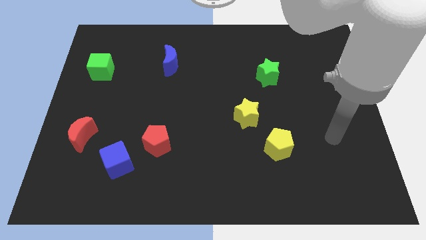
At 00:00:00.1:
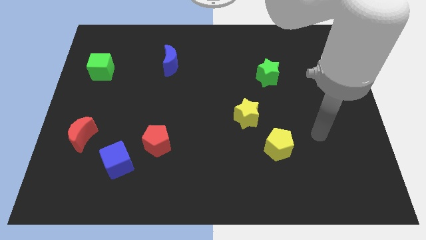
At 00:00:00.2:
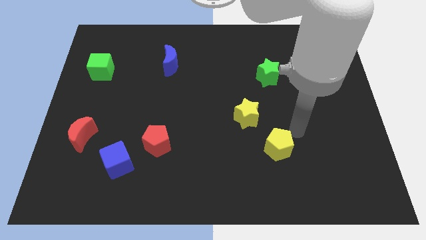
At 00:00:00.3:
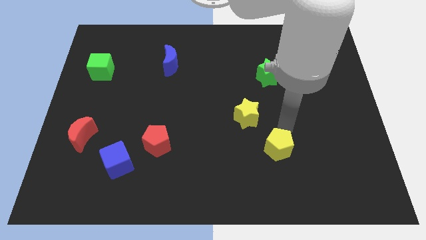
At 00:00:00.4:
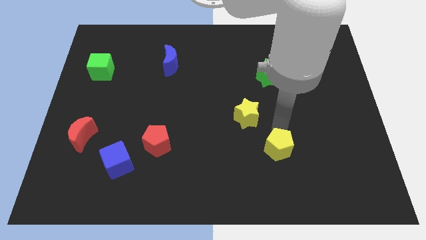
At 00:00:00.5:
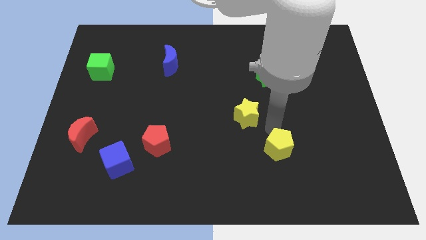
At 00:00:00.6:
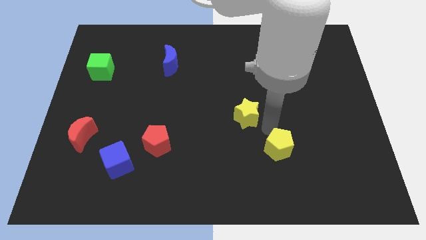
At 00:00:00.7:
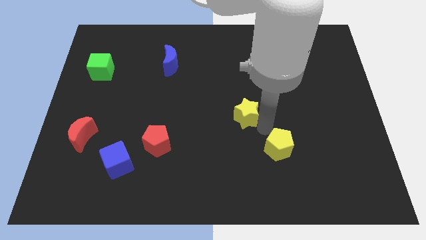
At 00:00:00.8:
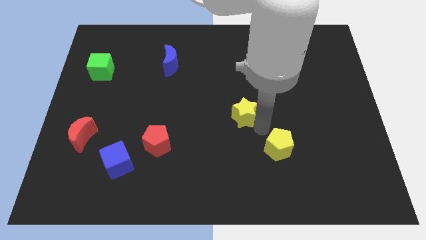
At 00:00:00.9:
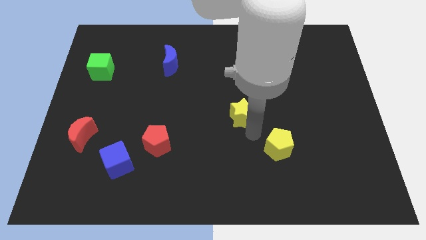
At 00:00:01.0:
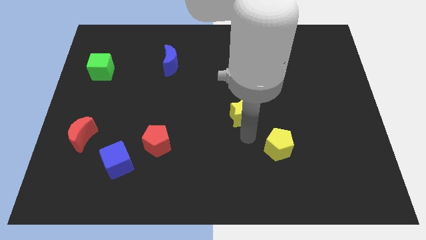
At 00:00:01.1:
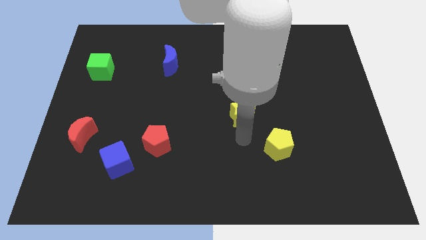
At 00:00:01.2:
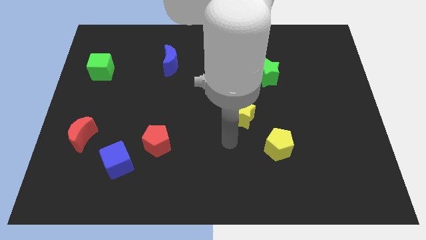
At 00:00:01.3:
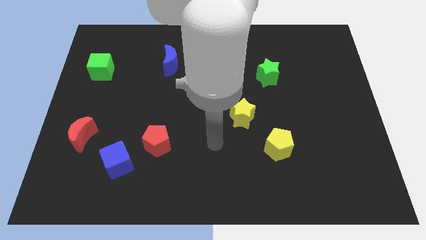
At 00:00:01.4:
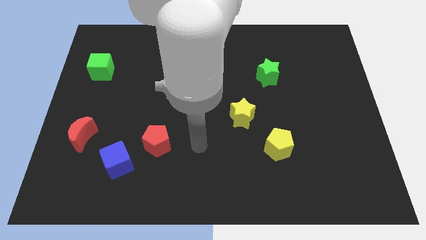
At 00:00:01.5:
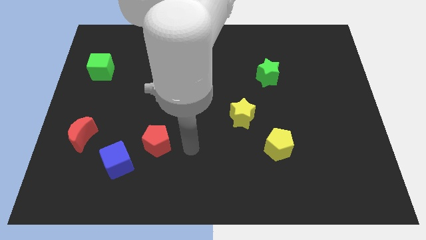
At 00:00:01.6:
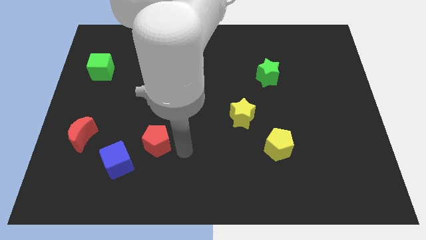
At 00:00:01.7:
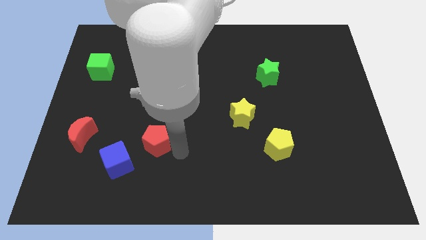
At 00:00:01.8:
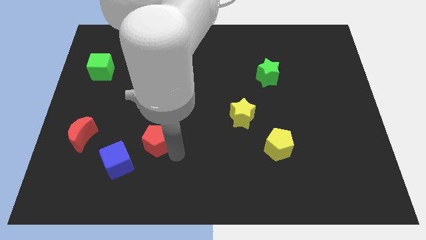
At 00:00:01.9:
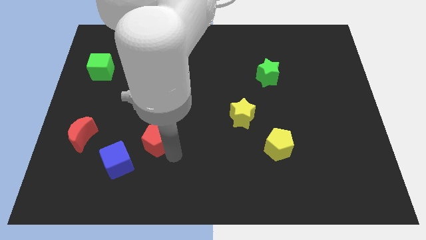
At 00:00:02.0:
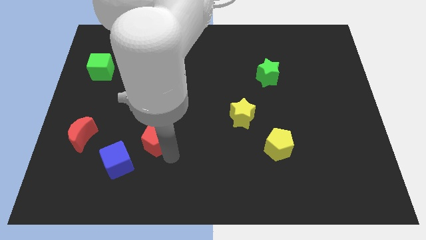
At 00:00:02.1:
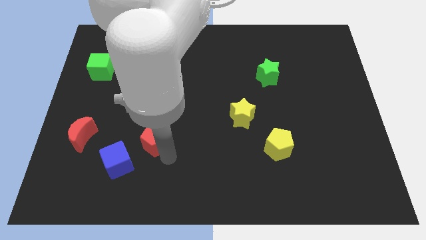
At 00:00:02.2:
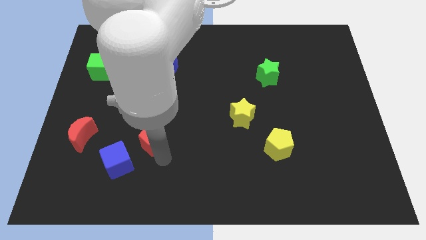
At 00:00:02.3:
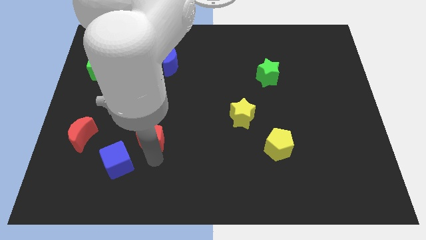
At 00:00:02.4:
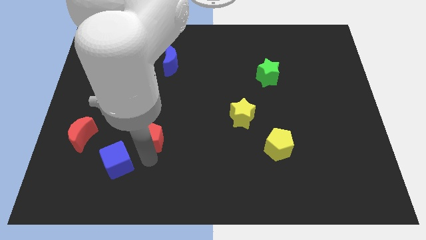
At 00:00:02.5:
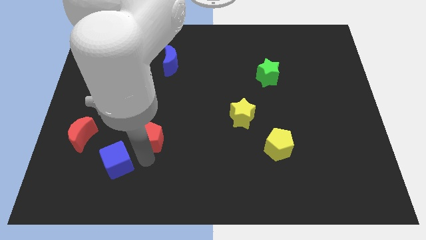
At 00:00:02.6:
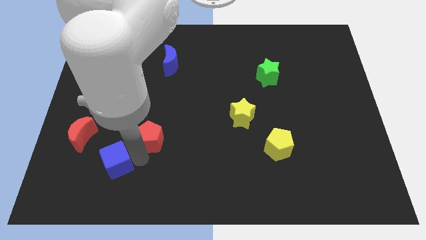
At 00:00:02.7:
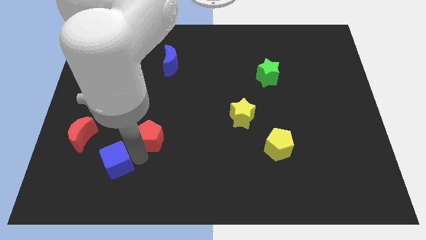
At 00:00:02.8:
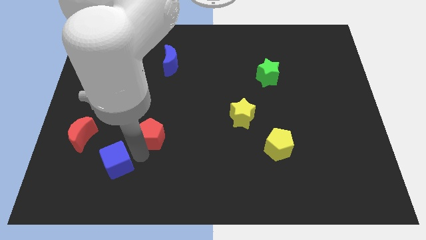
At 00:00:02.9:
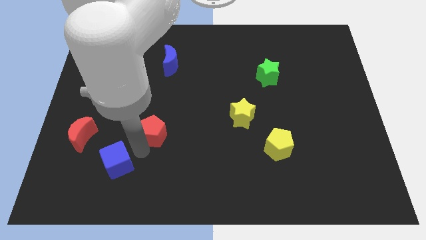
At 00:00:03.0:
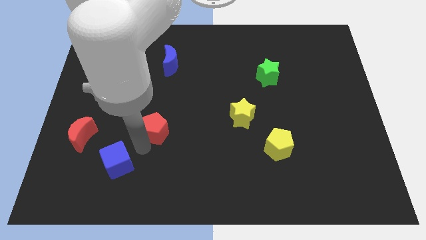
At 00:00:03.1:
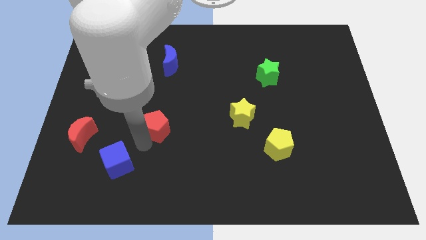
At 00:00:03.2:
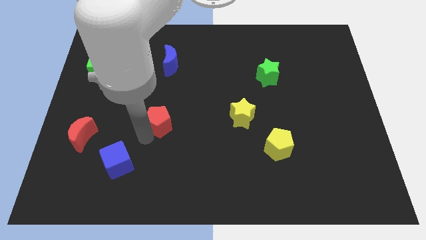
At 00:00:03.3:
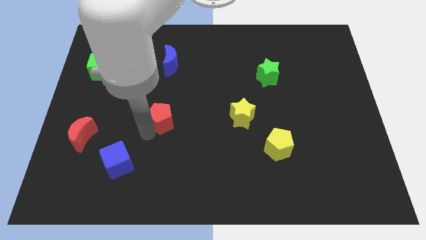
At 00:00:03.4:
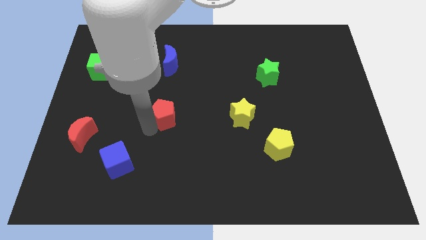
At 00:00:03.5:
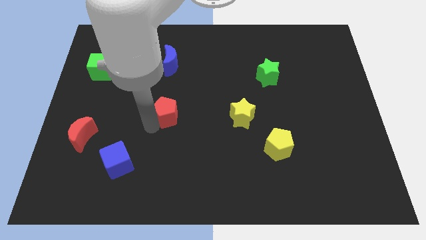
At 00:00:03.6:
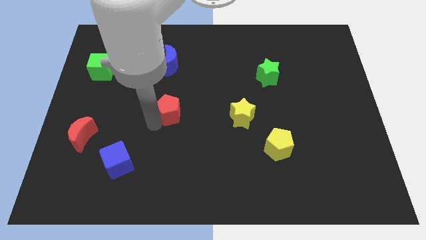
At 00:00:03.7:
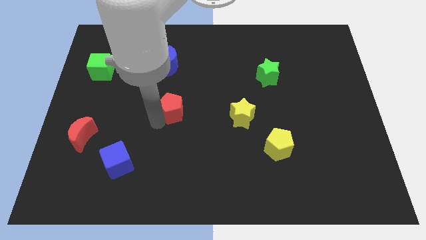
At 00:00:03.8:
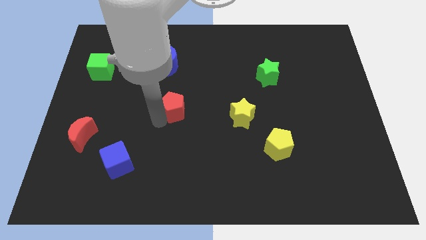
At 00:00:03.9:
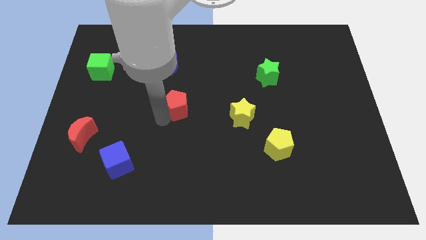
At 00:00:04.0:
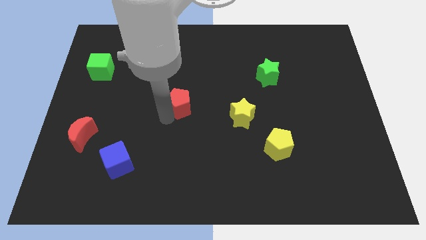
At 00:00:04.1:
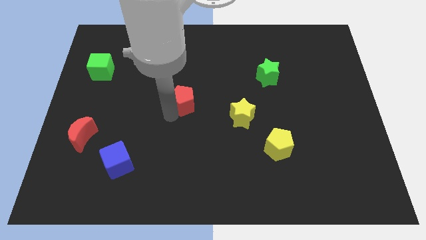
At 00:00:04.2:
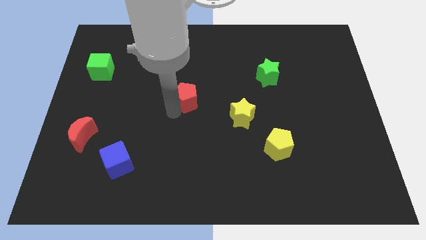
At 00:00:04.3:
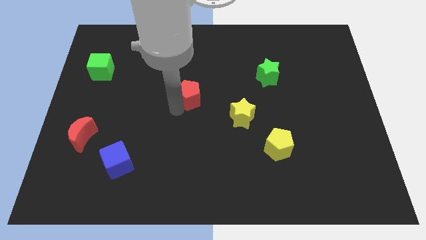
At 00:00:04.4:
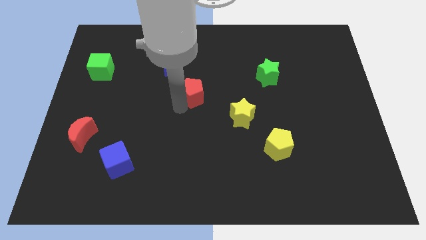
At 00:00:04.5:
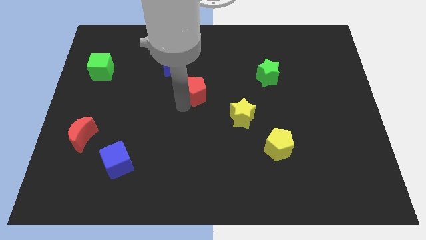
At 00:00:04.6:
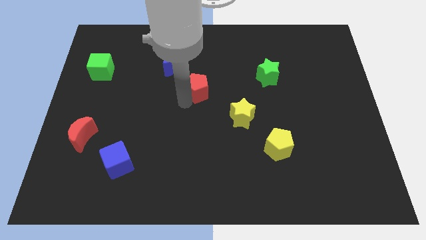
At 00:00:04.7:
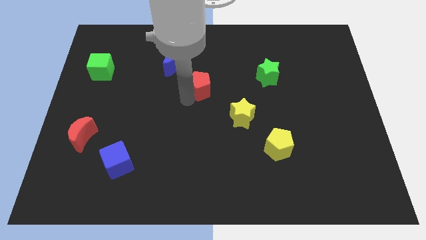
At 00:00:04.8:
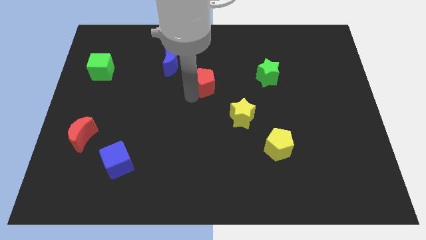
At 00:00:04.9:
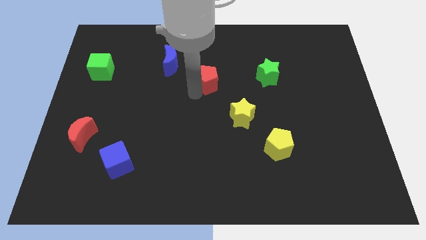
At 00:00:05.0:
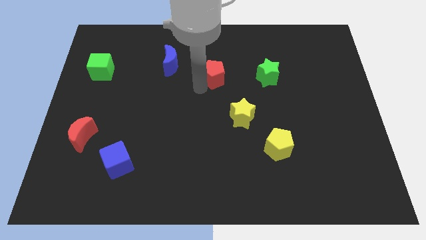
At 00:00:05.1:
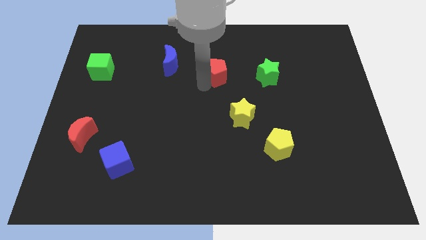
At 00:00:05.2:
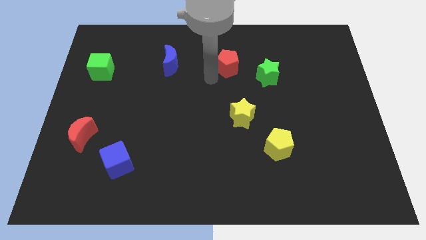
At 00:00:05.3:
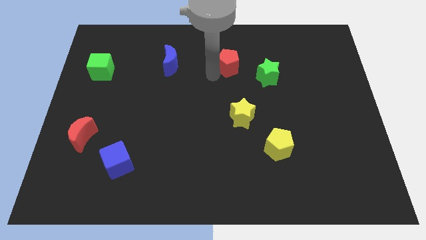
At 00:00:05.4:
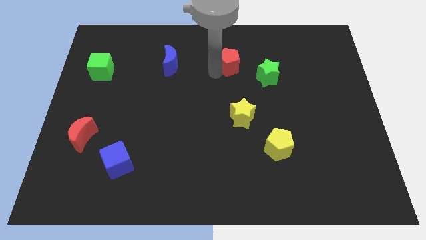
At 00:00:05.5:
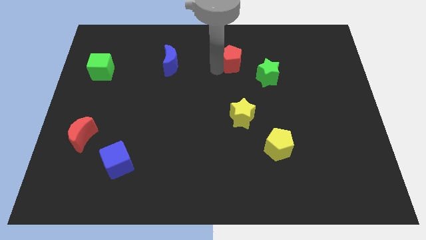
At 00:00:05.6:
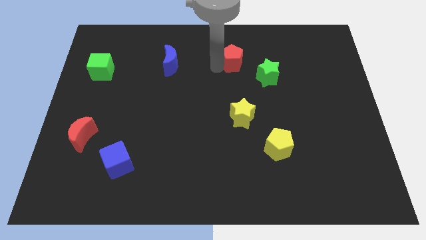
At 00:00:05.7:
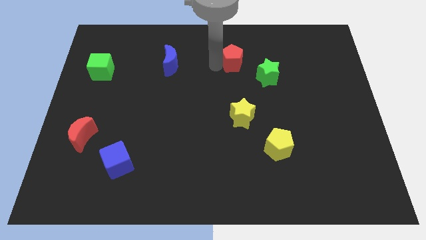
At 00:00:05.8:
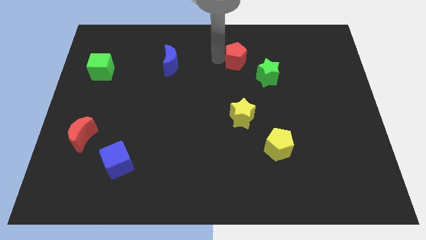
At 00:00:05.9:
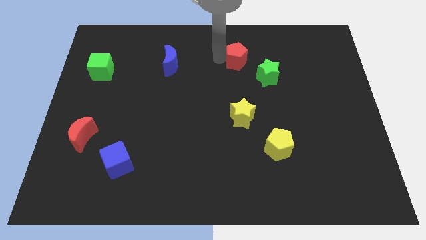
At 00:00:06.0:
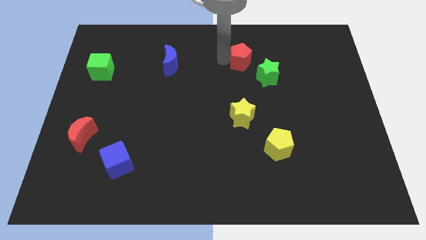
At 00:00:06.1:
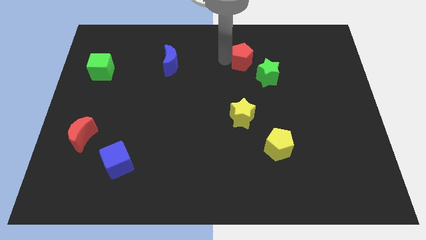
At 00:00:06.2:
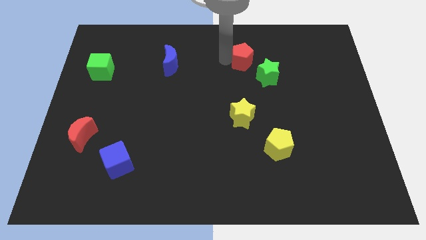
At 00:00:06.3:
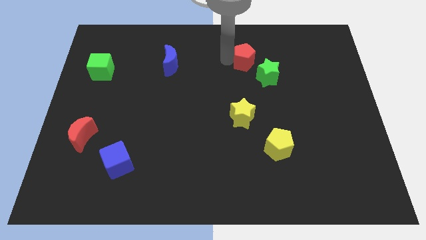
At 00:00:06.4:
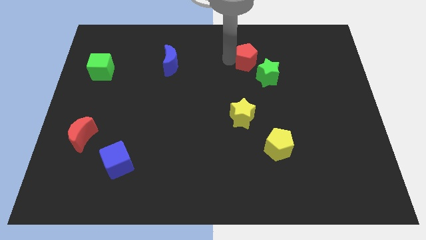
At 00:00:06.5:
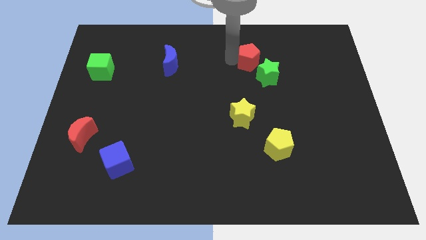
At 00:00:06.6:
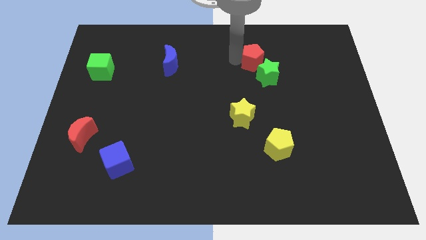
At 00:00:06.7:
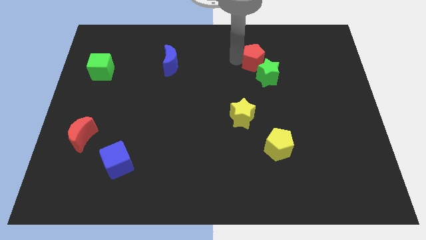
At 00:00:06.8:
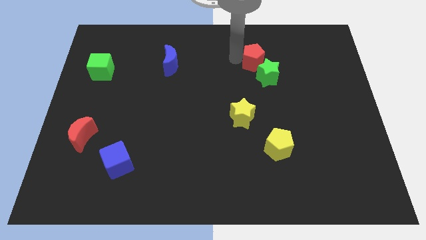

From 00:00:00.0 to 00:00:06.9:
move the red pentagon to the green star

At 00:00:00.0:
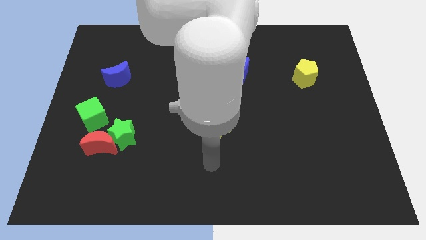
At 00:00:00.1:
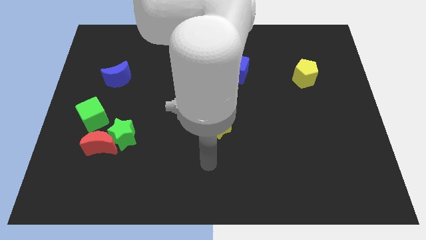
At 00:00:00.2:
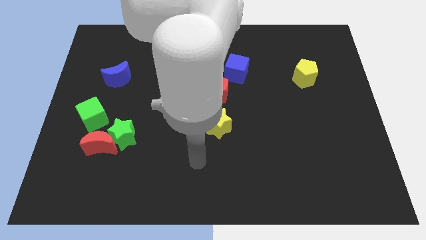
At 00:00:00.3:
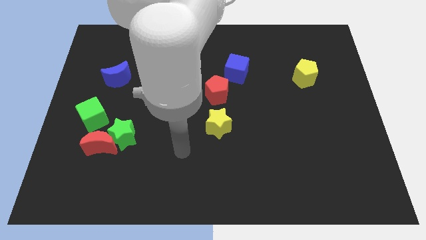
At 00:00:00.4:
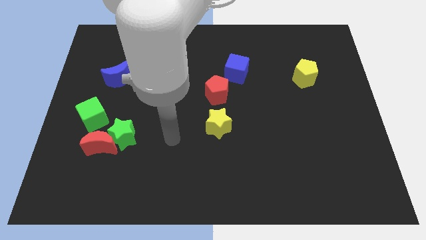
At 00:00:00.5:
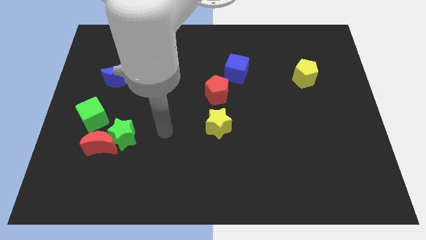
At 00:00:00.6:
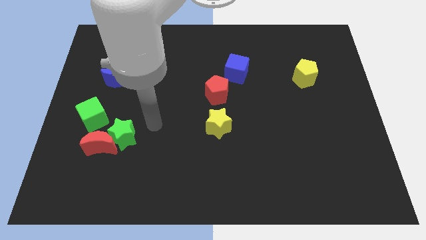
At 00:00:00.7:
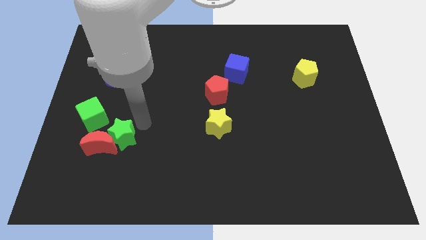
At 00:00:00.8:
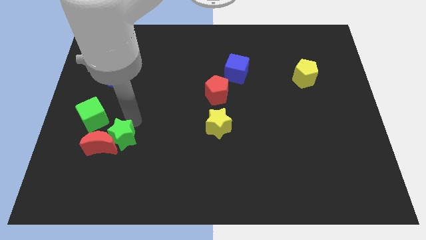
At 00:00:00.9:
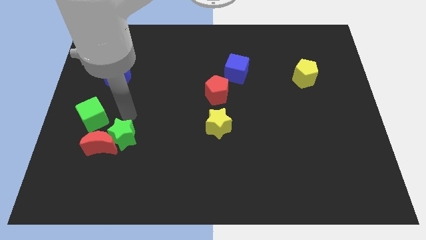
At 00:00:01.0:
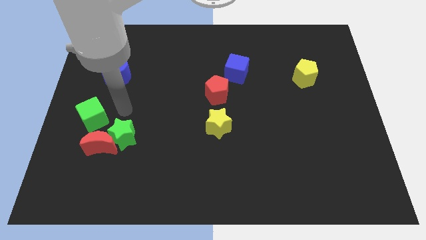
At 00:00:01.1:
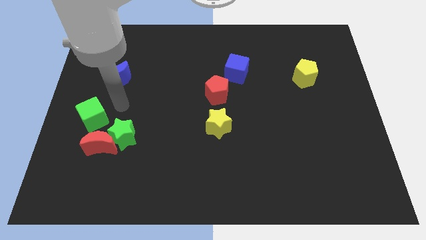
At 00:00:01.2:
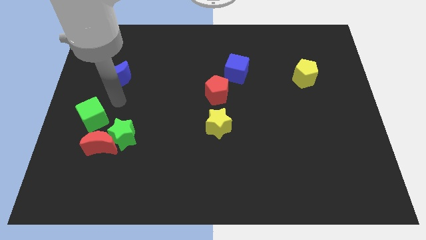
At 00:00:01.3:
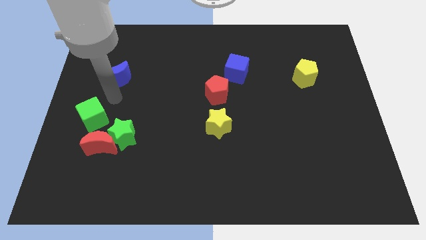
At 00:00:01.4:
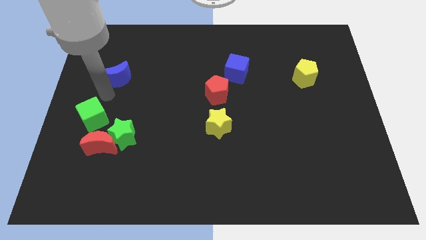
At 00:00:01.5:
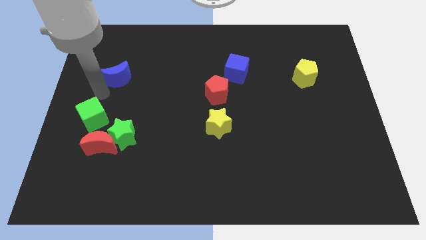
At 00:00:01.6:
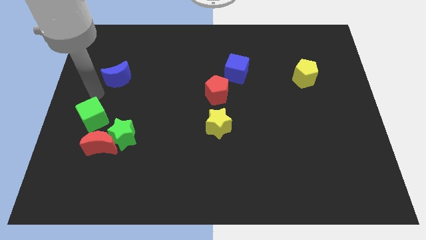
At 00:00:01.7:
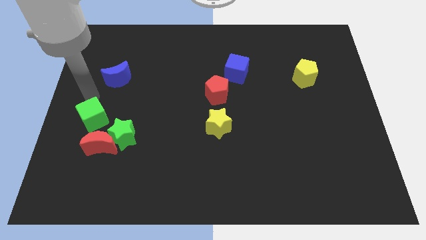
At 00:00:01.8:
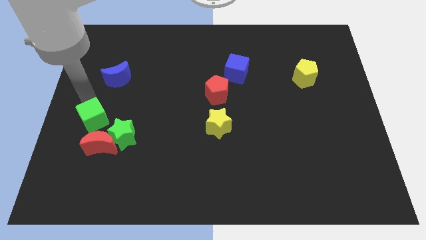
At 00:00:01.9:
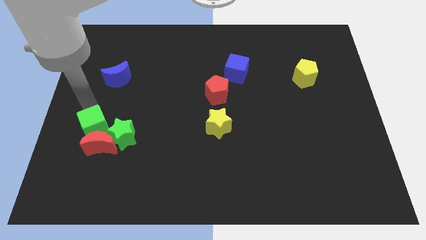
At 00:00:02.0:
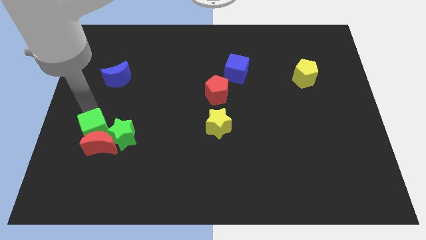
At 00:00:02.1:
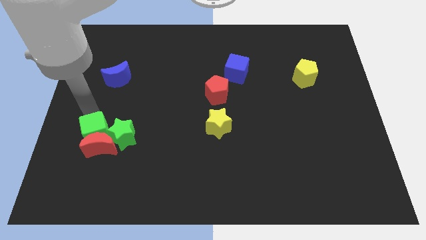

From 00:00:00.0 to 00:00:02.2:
put the green cube towards the red moon
